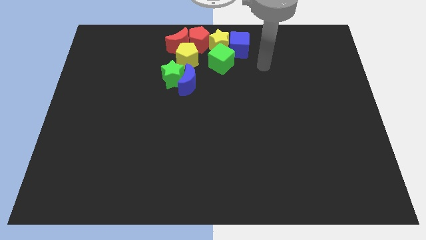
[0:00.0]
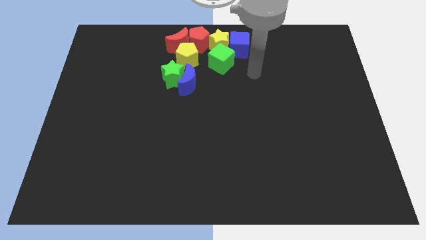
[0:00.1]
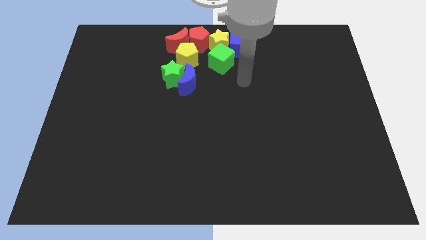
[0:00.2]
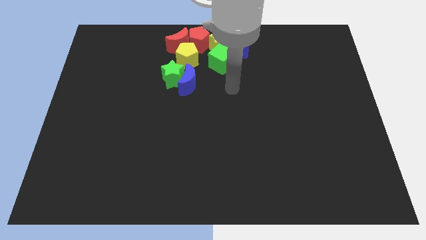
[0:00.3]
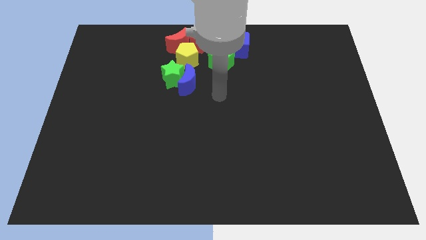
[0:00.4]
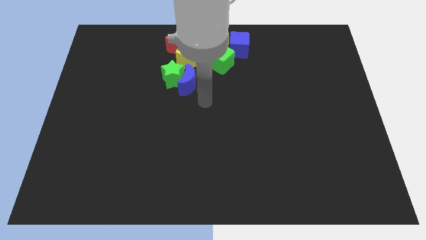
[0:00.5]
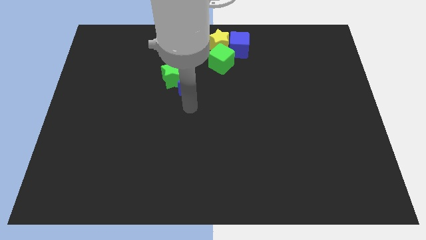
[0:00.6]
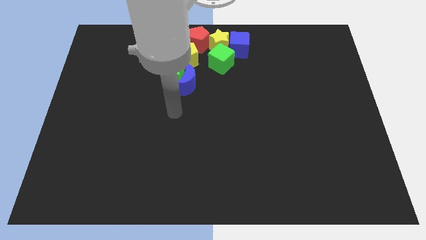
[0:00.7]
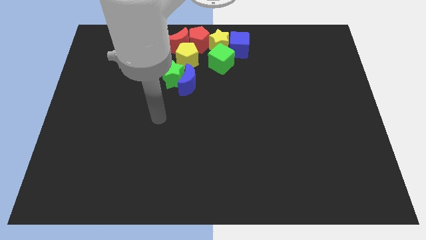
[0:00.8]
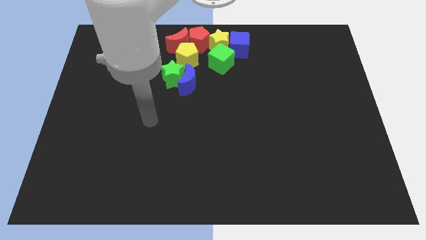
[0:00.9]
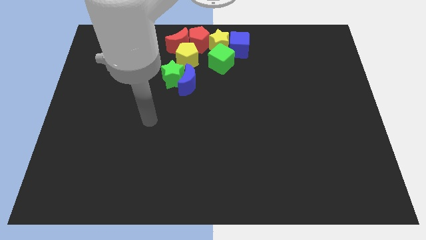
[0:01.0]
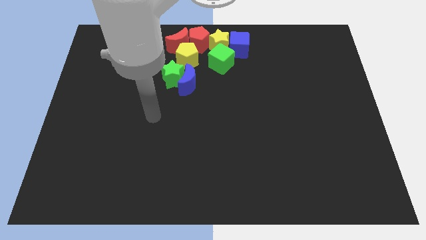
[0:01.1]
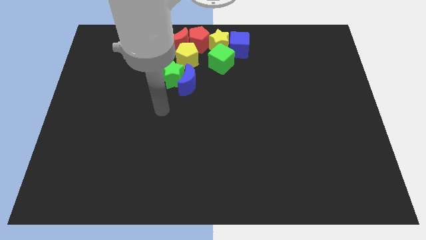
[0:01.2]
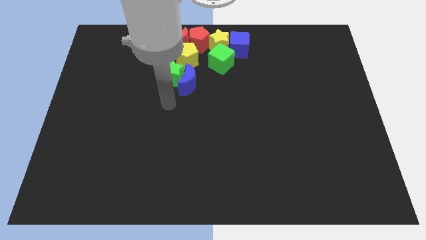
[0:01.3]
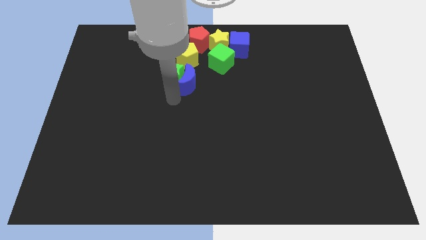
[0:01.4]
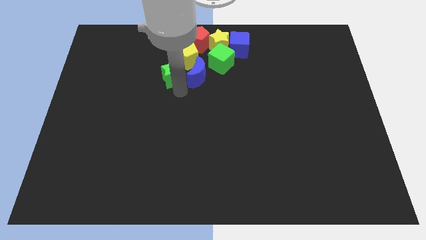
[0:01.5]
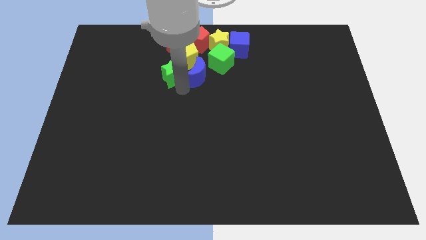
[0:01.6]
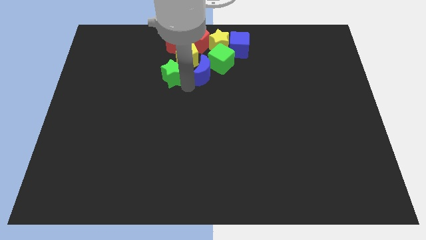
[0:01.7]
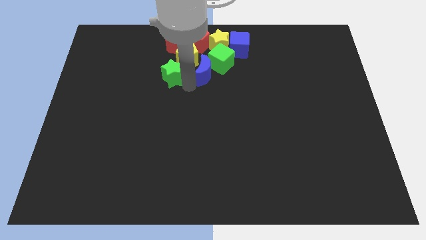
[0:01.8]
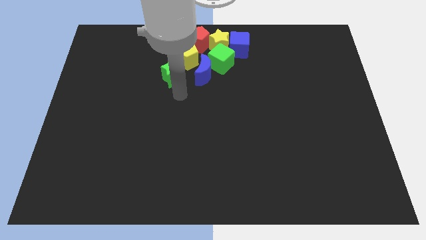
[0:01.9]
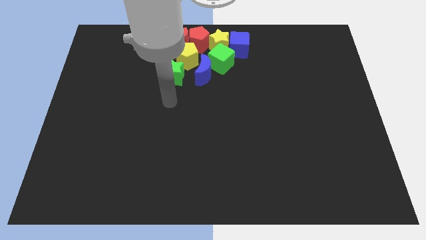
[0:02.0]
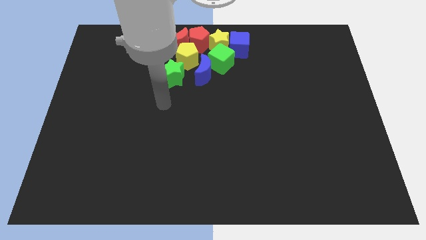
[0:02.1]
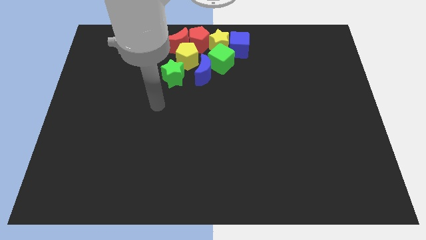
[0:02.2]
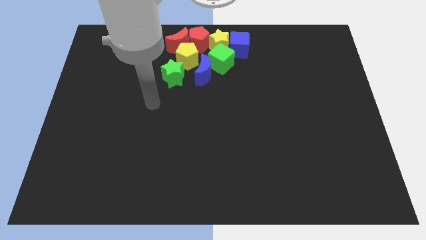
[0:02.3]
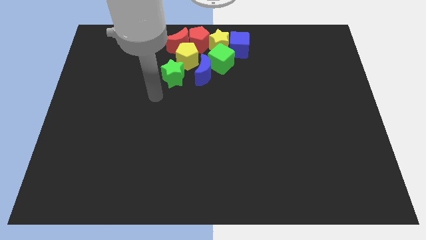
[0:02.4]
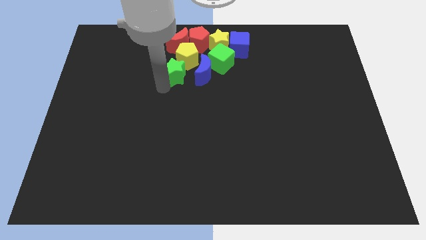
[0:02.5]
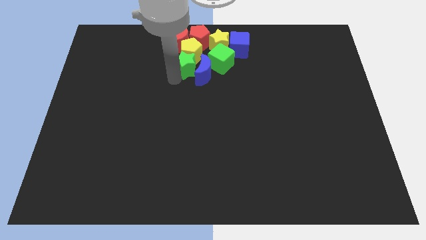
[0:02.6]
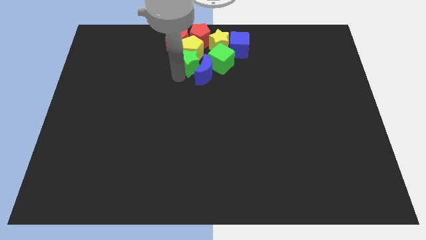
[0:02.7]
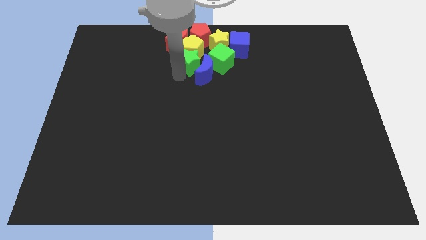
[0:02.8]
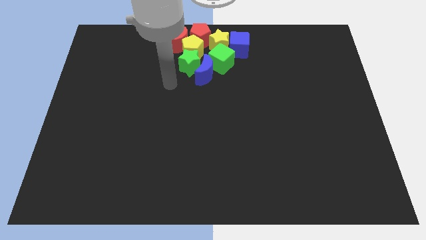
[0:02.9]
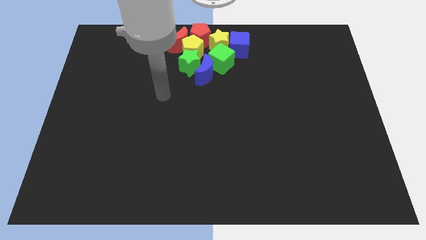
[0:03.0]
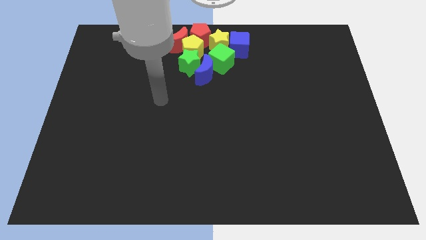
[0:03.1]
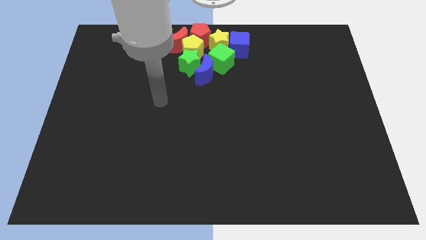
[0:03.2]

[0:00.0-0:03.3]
push the blue crescent and green star into the group of blocks

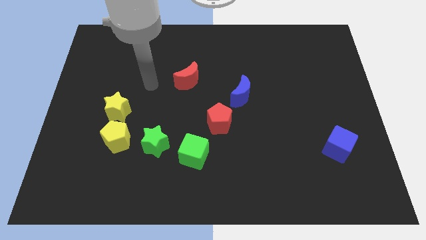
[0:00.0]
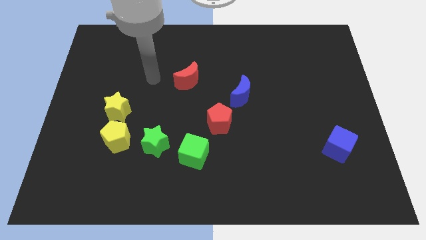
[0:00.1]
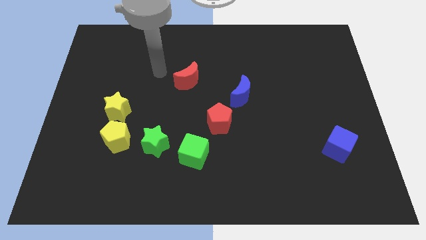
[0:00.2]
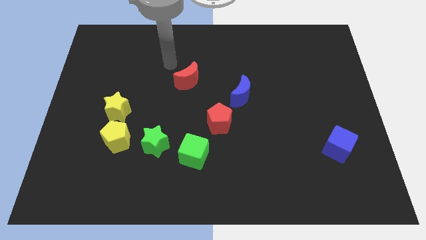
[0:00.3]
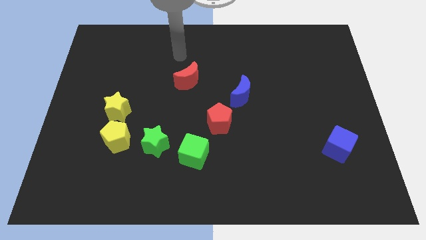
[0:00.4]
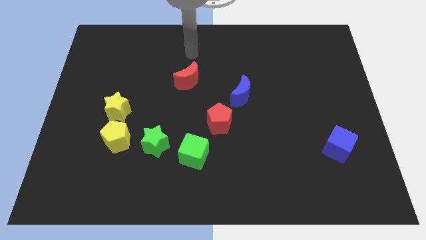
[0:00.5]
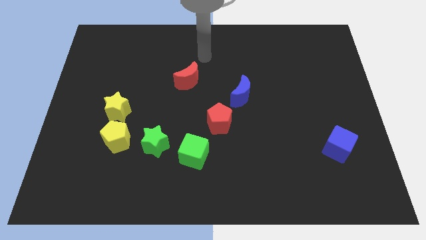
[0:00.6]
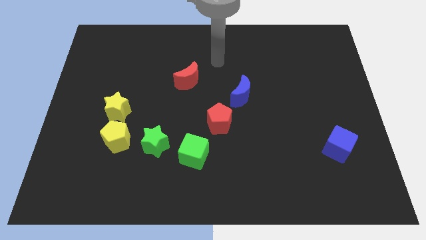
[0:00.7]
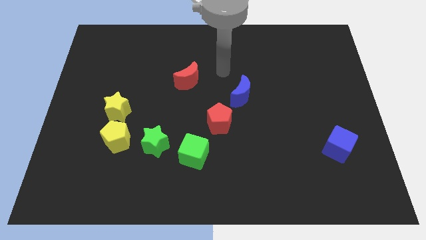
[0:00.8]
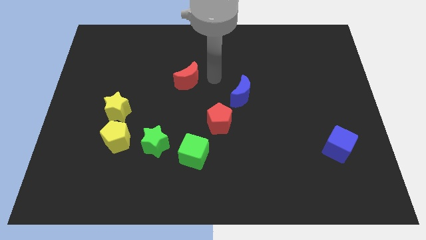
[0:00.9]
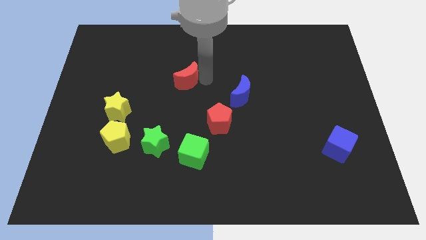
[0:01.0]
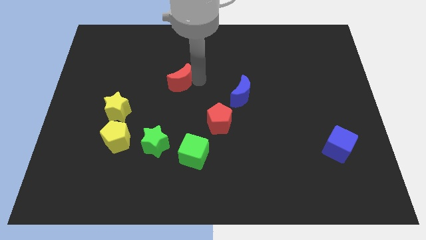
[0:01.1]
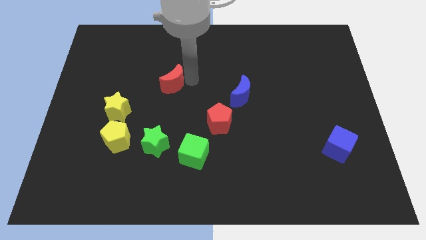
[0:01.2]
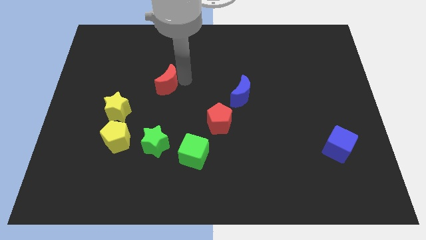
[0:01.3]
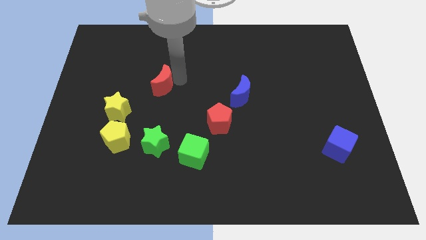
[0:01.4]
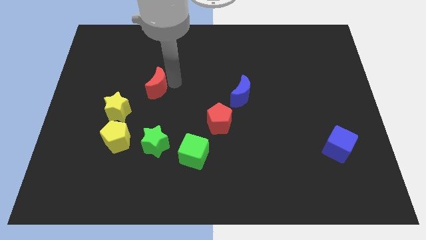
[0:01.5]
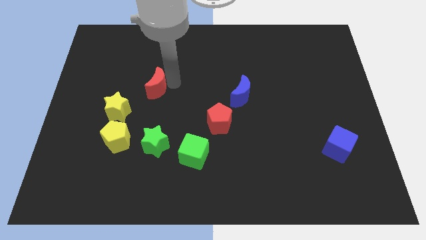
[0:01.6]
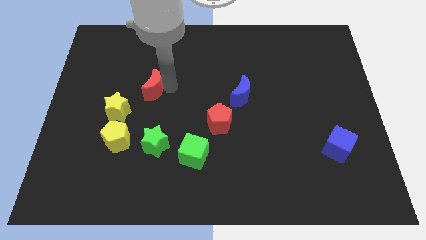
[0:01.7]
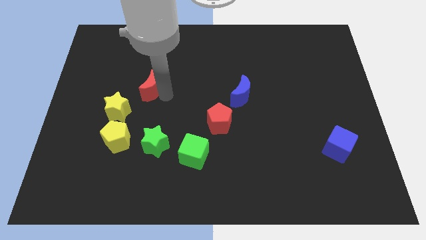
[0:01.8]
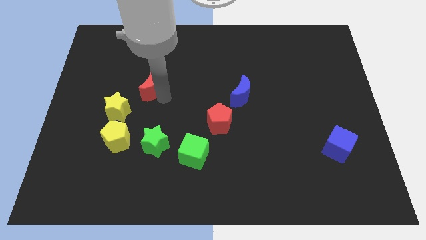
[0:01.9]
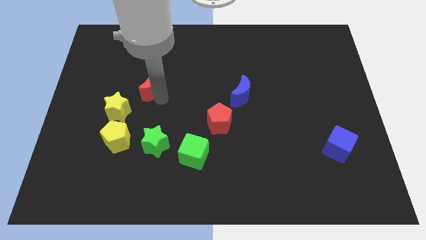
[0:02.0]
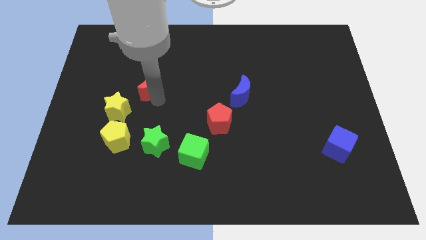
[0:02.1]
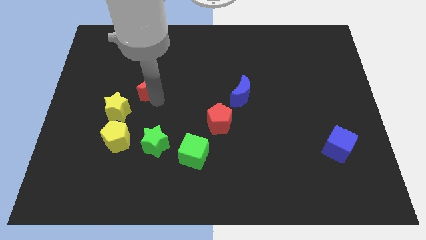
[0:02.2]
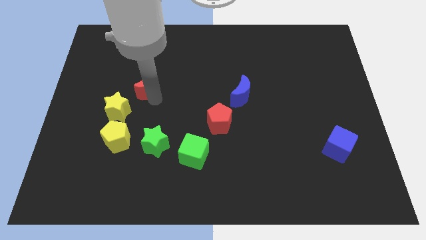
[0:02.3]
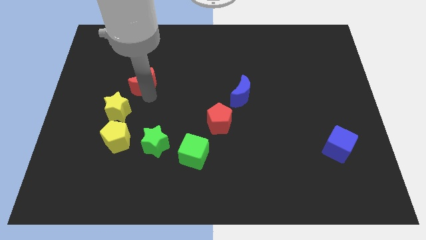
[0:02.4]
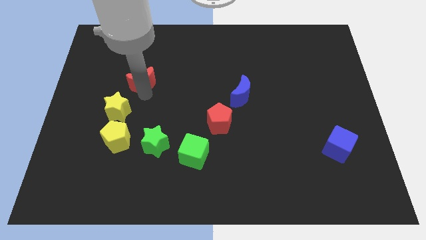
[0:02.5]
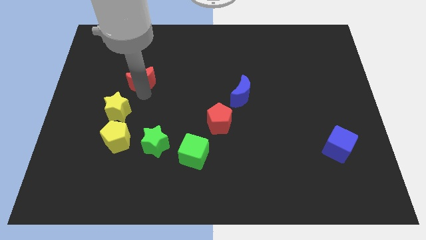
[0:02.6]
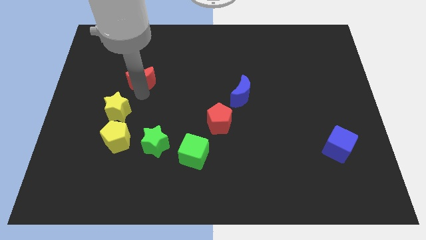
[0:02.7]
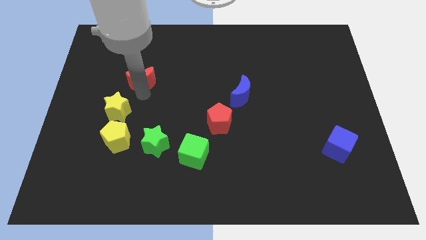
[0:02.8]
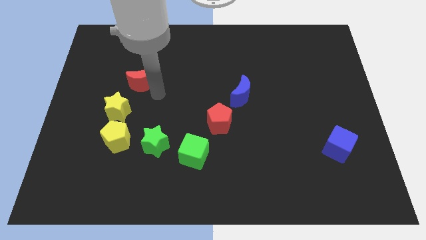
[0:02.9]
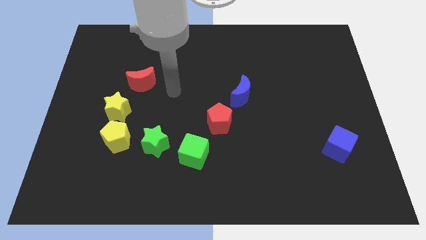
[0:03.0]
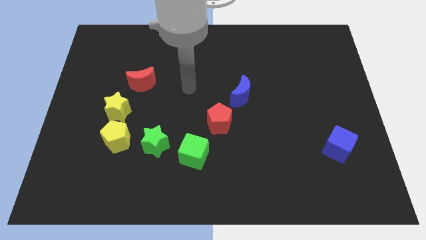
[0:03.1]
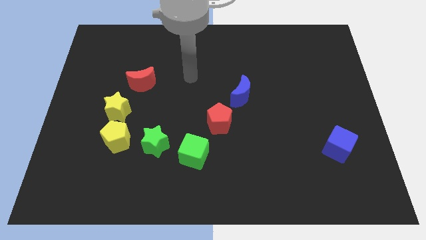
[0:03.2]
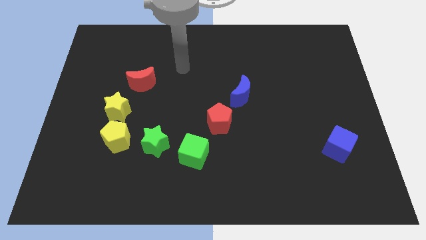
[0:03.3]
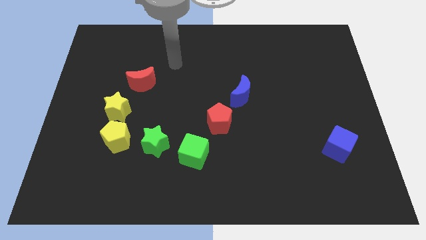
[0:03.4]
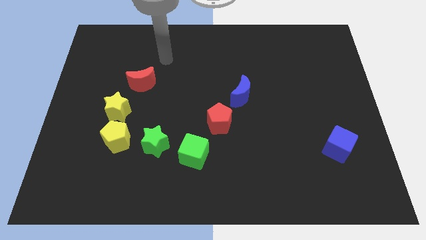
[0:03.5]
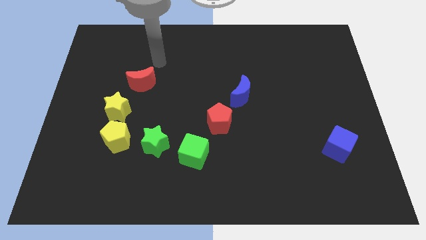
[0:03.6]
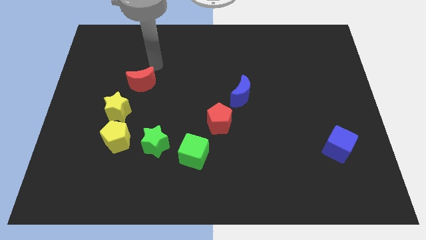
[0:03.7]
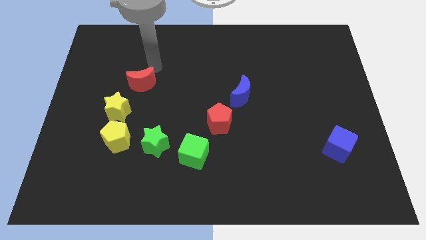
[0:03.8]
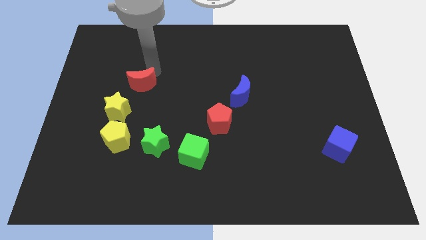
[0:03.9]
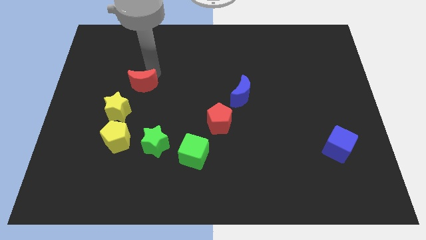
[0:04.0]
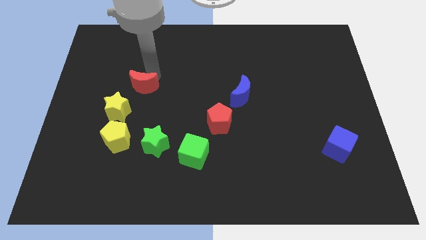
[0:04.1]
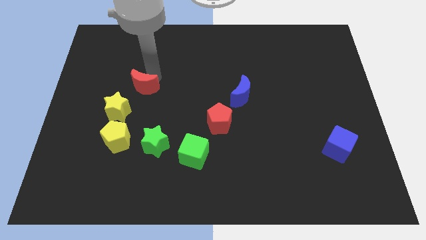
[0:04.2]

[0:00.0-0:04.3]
move the red crescent towards the yellow star

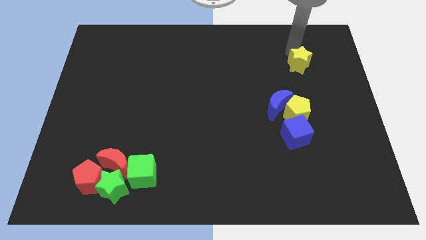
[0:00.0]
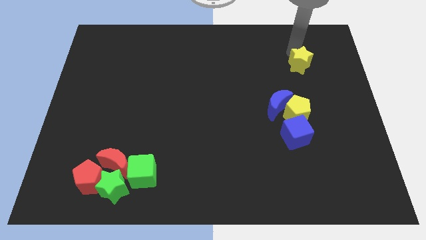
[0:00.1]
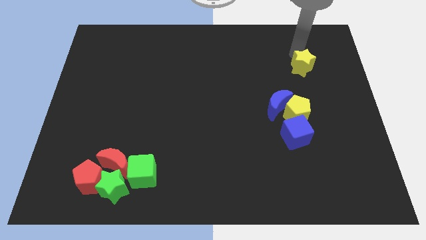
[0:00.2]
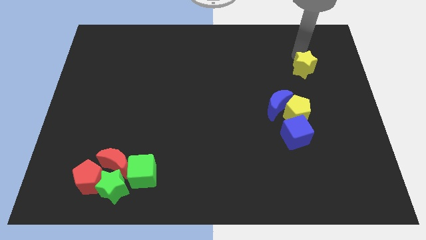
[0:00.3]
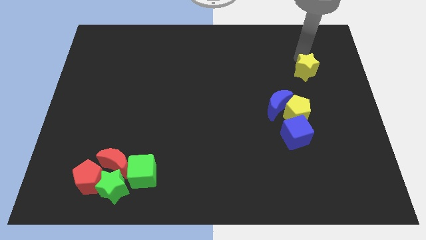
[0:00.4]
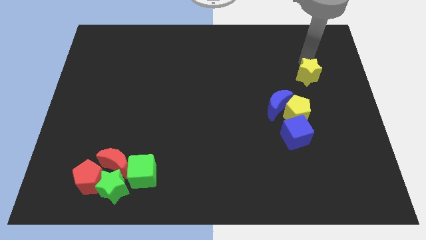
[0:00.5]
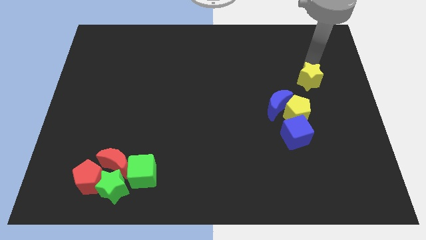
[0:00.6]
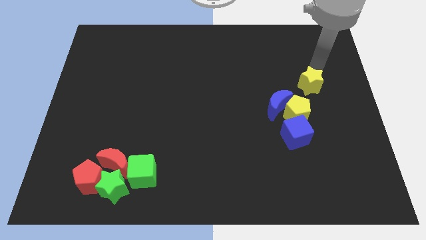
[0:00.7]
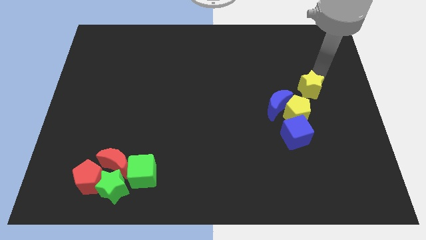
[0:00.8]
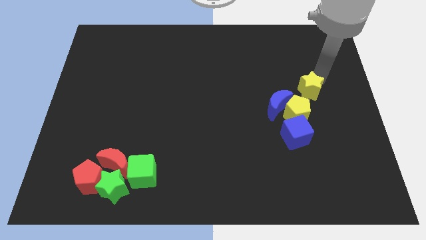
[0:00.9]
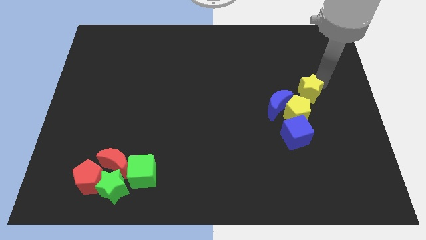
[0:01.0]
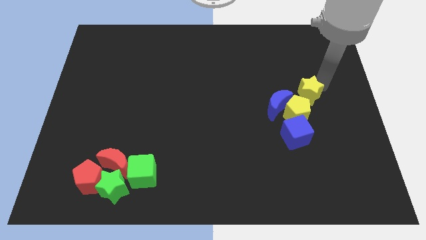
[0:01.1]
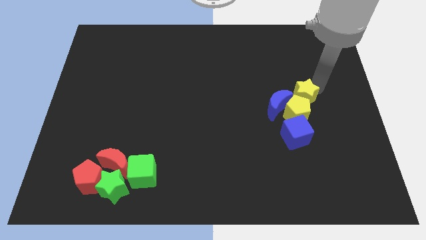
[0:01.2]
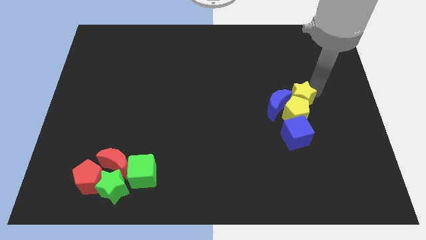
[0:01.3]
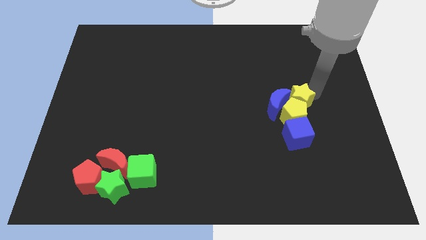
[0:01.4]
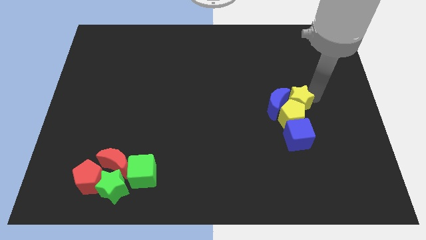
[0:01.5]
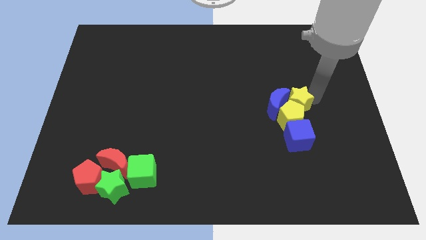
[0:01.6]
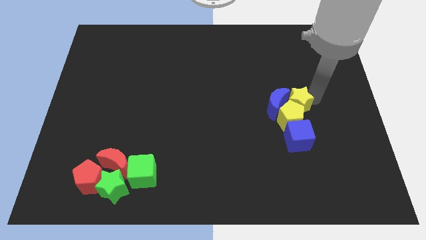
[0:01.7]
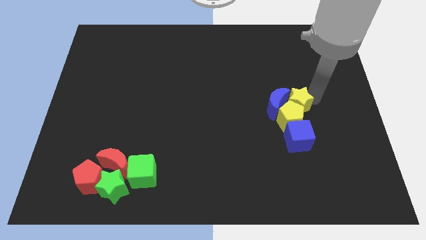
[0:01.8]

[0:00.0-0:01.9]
push the yellow star into the yellow pentagon
